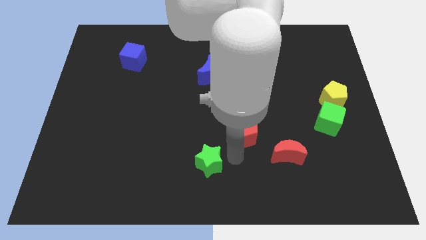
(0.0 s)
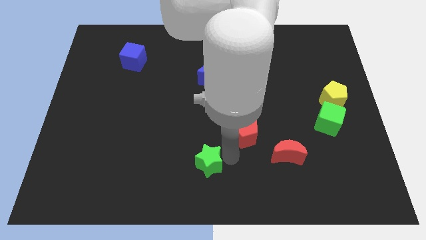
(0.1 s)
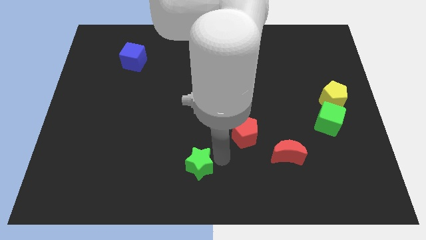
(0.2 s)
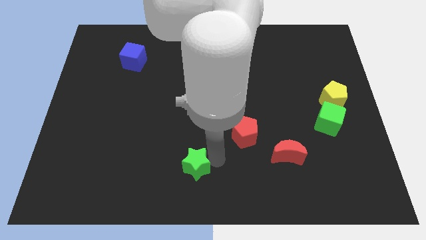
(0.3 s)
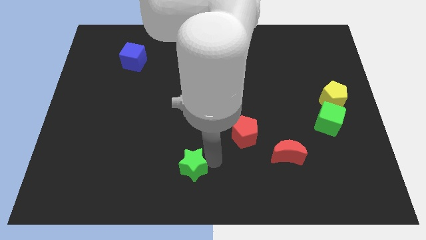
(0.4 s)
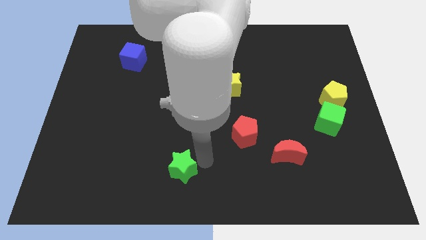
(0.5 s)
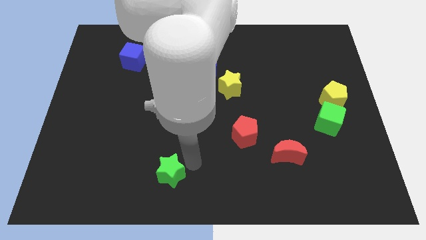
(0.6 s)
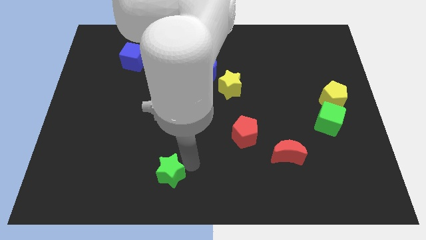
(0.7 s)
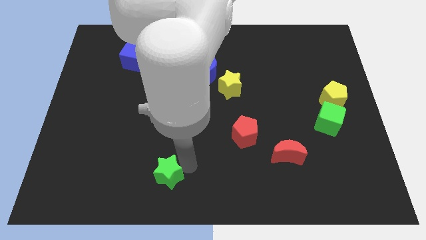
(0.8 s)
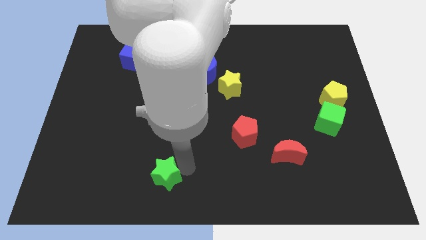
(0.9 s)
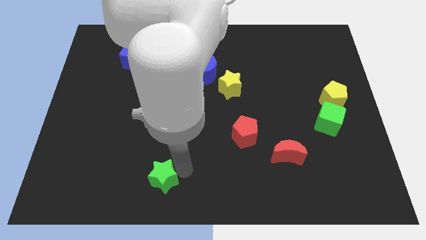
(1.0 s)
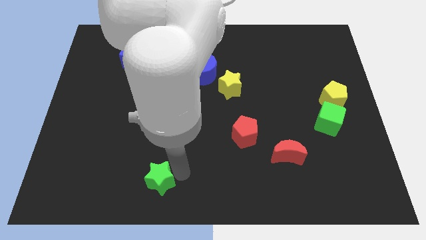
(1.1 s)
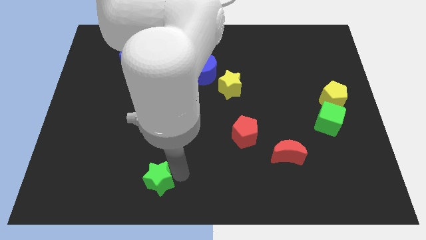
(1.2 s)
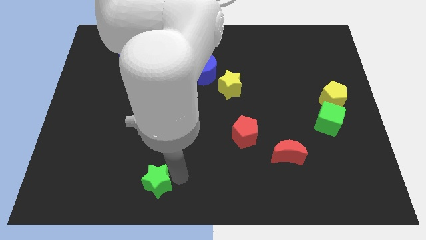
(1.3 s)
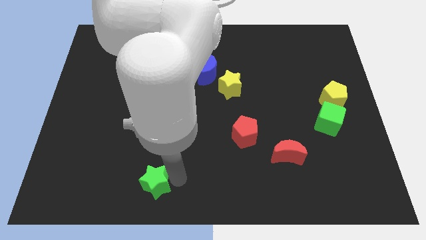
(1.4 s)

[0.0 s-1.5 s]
move the green star slightly to the bottom side of the board

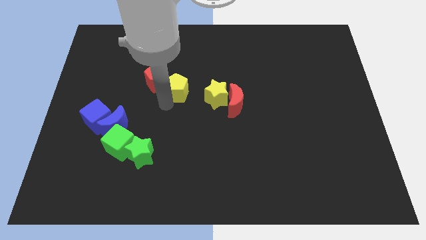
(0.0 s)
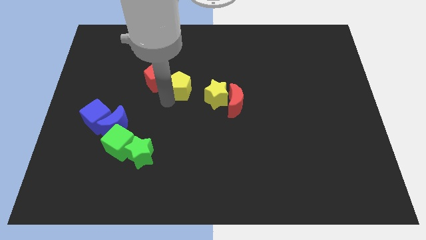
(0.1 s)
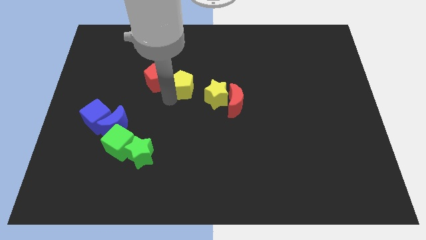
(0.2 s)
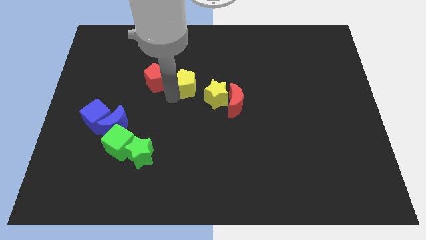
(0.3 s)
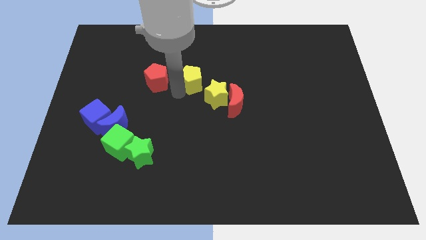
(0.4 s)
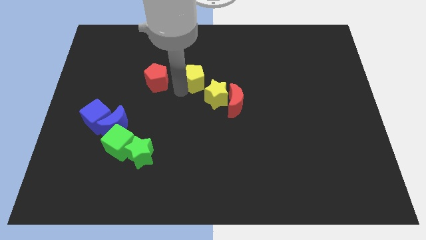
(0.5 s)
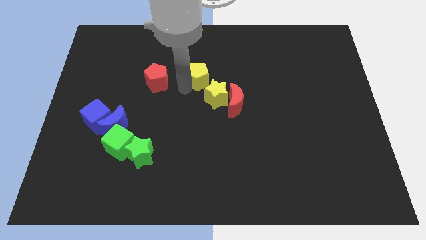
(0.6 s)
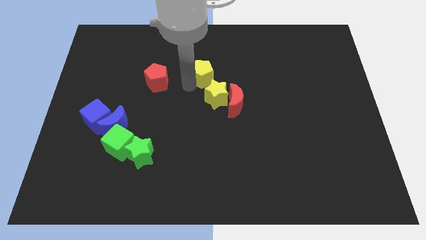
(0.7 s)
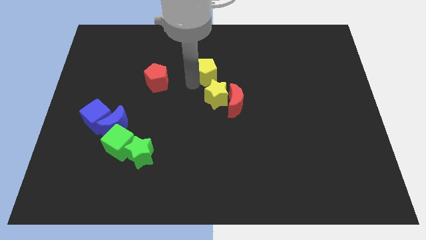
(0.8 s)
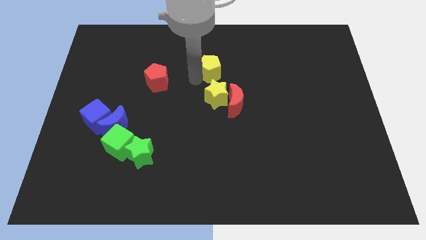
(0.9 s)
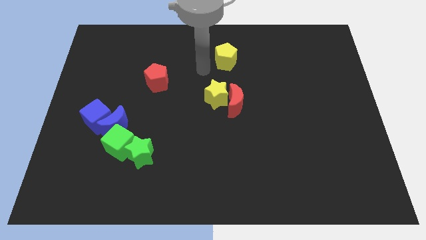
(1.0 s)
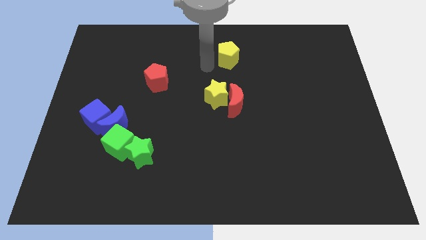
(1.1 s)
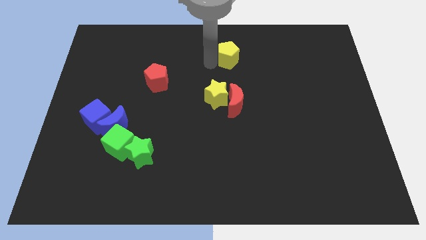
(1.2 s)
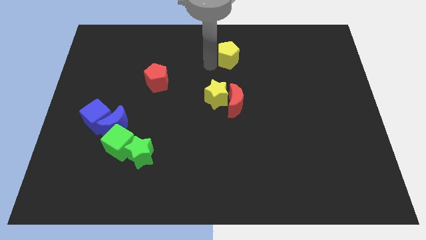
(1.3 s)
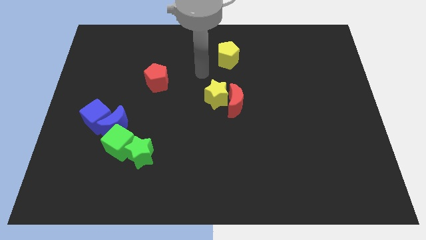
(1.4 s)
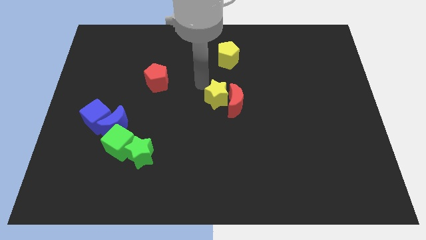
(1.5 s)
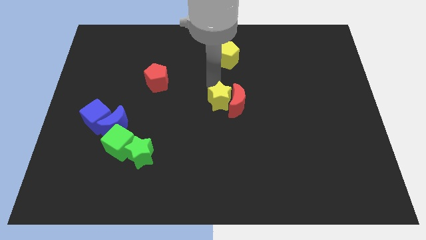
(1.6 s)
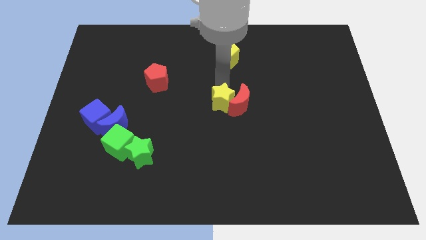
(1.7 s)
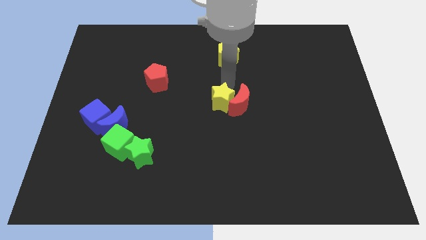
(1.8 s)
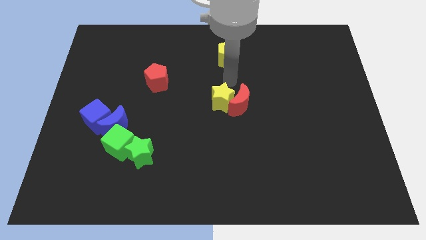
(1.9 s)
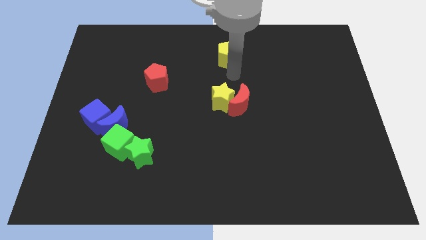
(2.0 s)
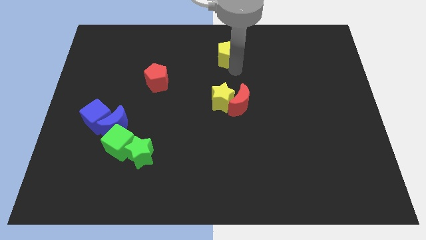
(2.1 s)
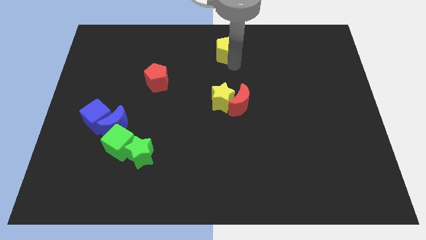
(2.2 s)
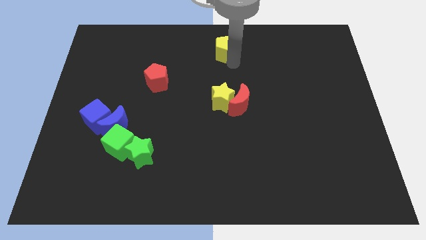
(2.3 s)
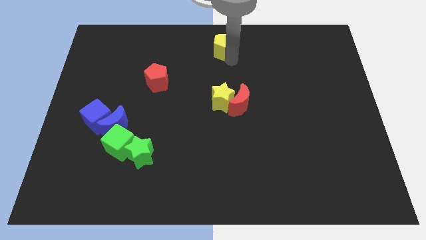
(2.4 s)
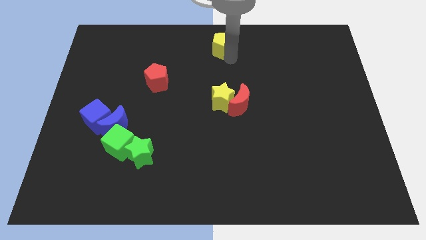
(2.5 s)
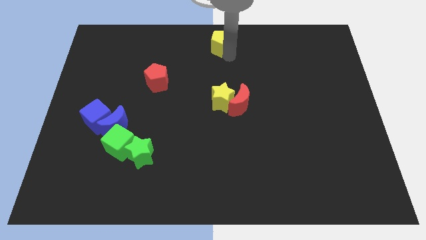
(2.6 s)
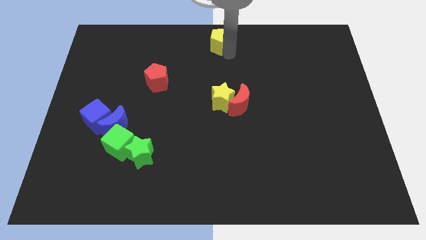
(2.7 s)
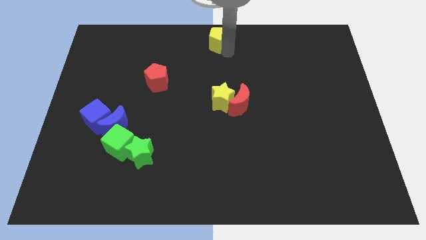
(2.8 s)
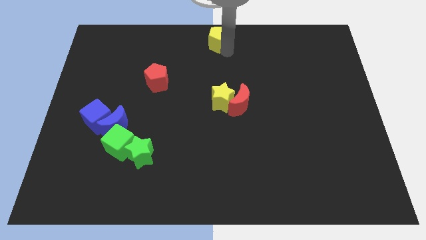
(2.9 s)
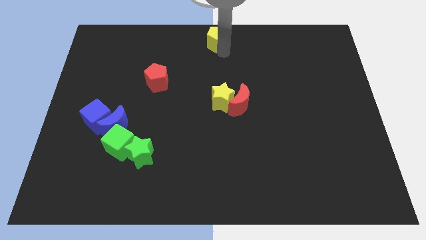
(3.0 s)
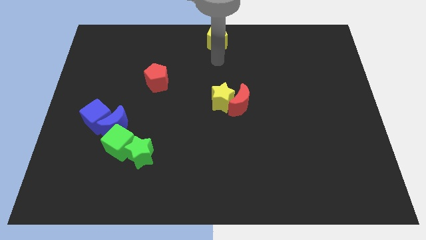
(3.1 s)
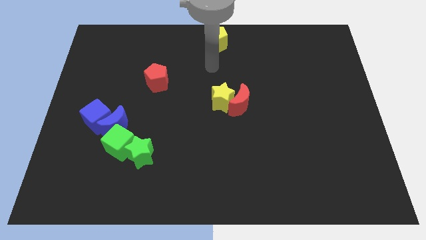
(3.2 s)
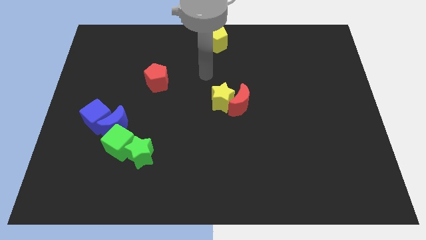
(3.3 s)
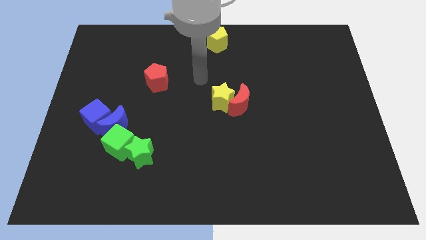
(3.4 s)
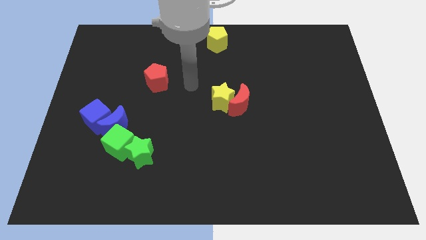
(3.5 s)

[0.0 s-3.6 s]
place the yellow pentagon on the top center of the board

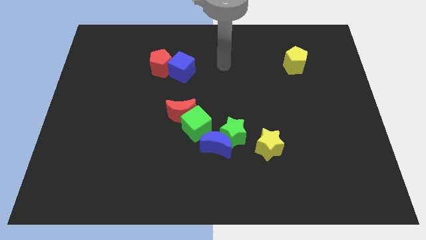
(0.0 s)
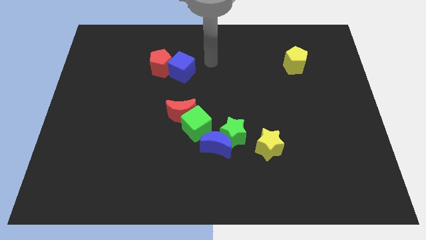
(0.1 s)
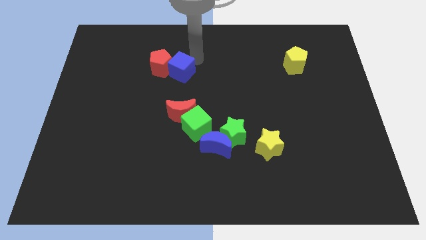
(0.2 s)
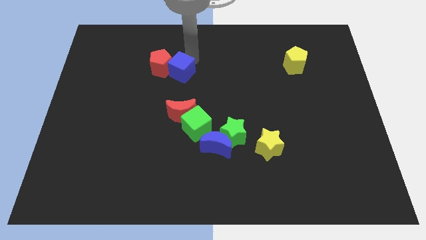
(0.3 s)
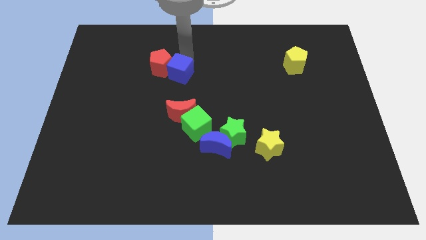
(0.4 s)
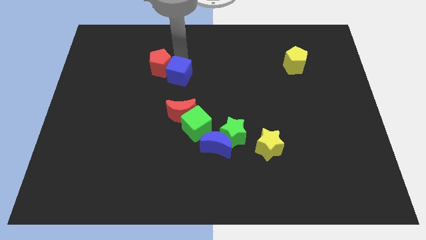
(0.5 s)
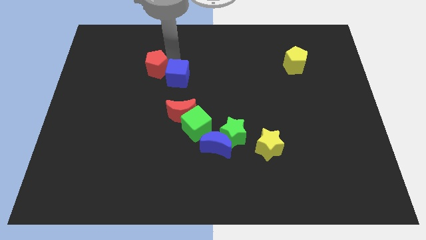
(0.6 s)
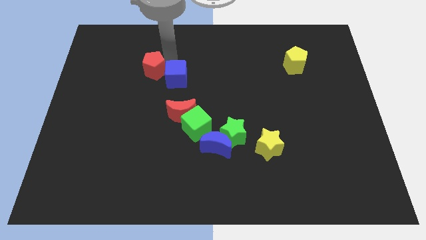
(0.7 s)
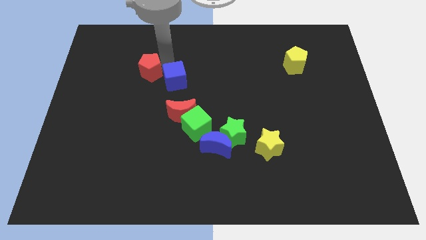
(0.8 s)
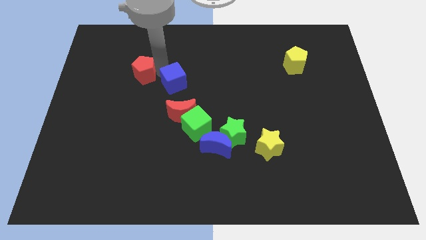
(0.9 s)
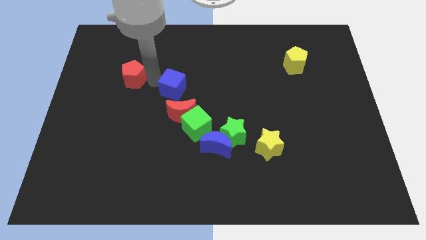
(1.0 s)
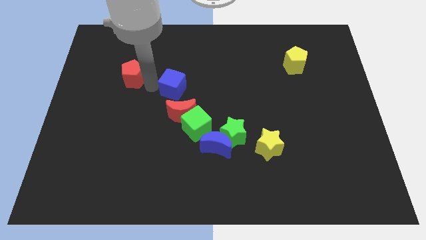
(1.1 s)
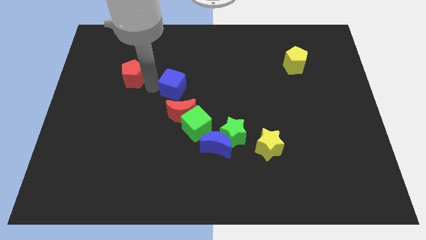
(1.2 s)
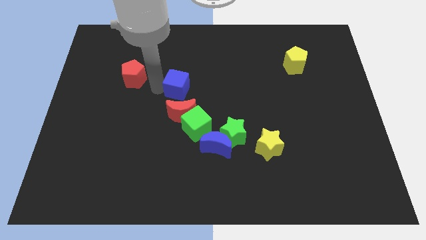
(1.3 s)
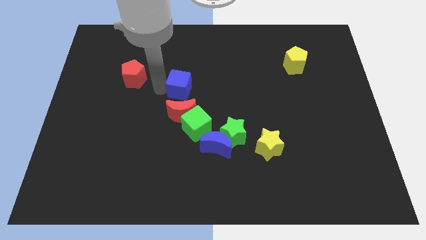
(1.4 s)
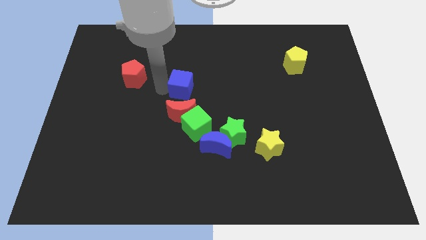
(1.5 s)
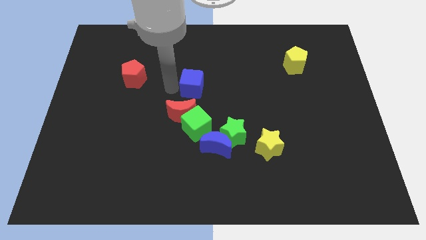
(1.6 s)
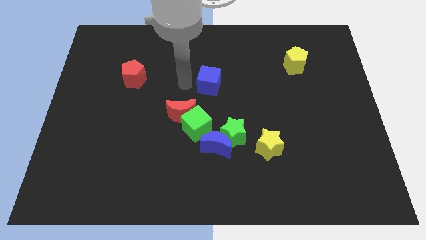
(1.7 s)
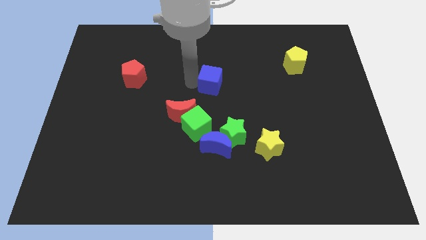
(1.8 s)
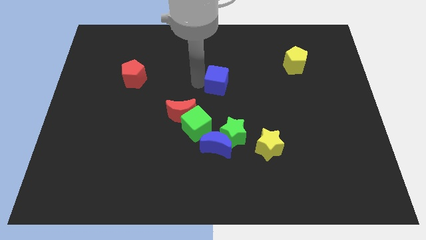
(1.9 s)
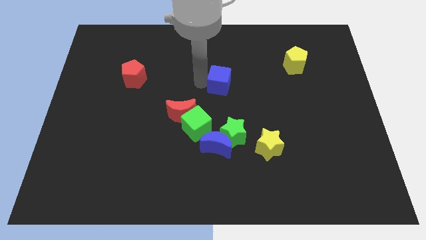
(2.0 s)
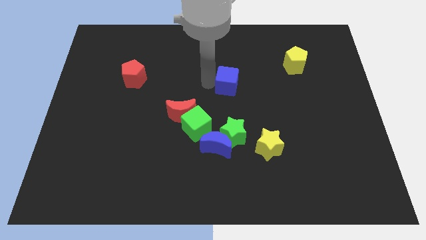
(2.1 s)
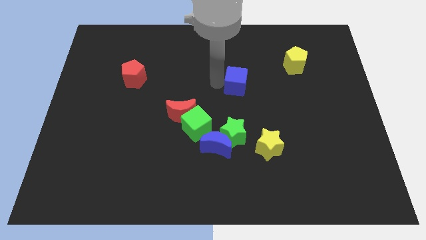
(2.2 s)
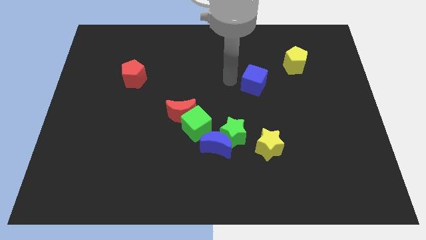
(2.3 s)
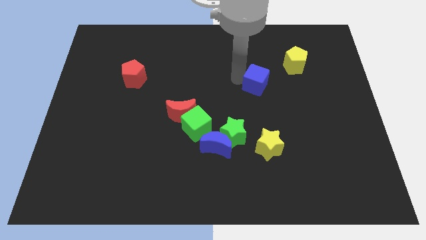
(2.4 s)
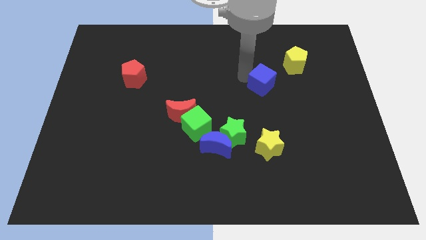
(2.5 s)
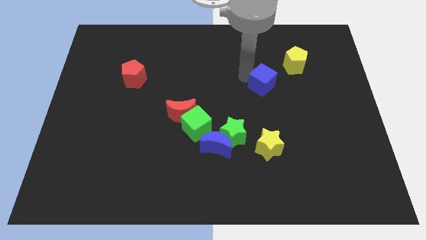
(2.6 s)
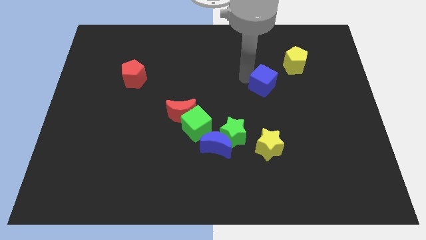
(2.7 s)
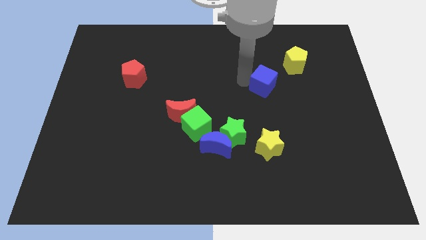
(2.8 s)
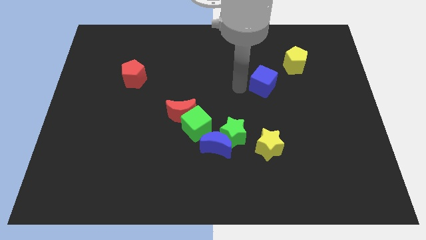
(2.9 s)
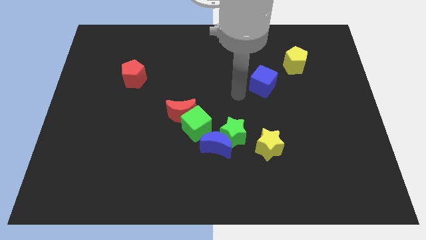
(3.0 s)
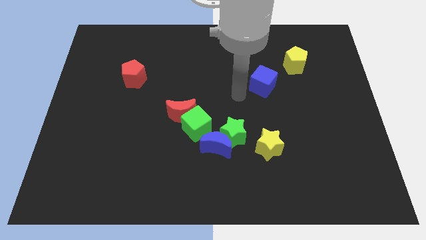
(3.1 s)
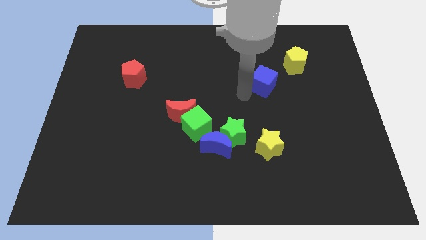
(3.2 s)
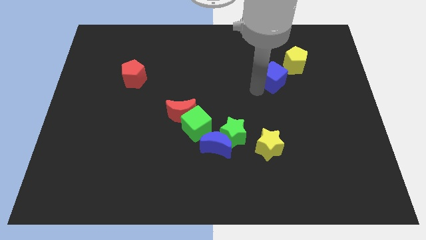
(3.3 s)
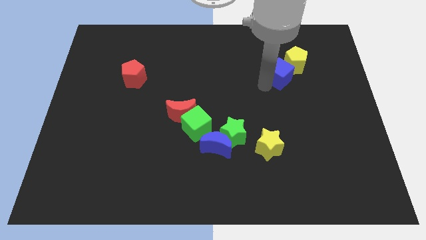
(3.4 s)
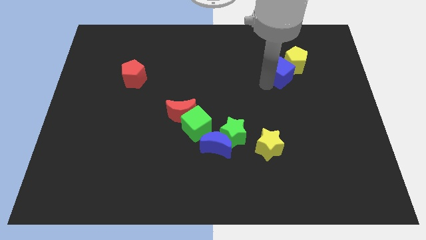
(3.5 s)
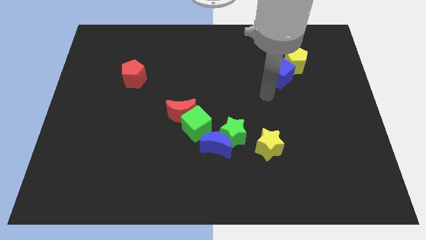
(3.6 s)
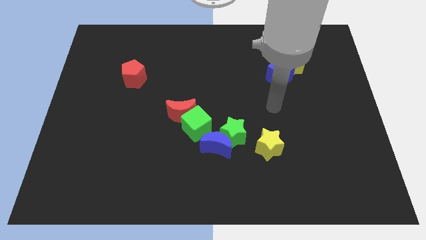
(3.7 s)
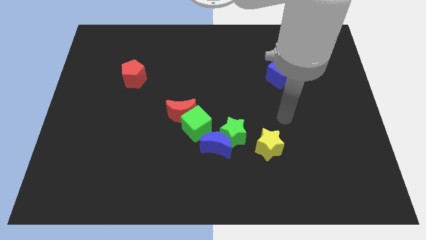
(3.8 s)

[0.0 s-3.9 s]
push the blue cube into the bottom left of the yellow pentagon
